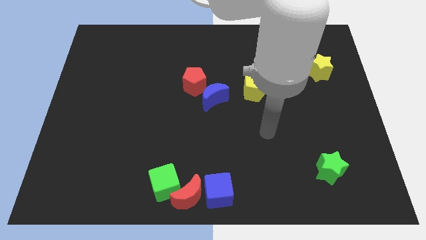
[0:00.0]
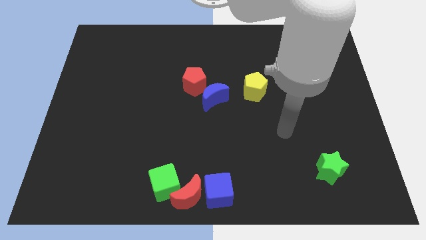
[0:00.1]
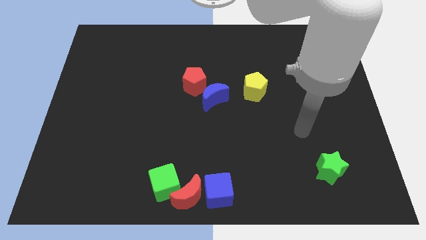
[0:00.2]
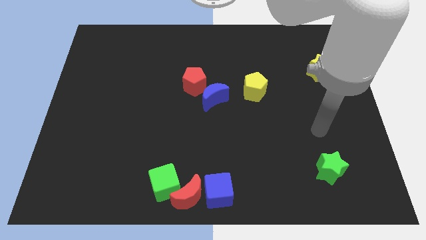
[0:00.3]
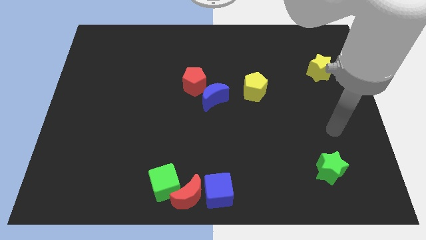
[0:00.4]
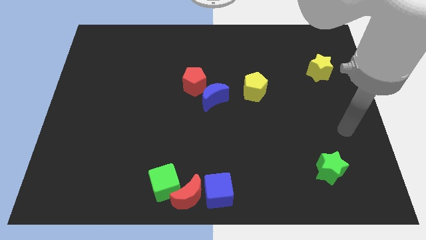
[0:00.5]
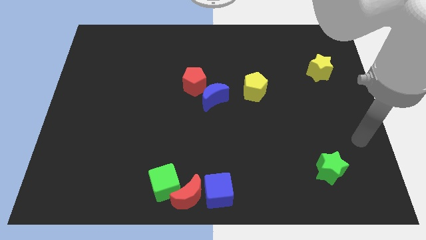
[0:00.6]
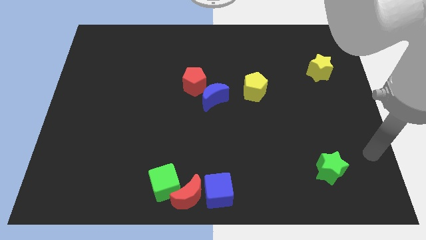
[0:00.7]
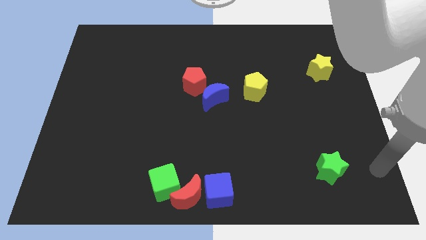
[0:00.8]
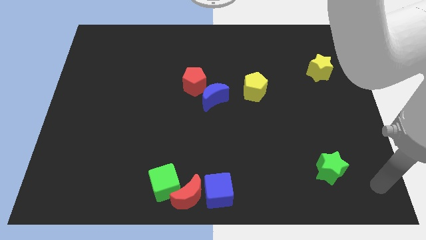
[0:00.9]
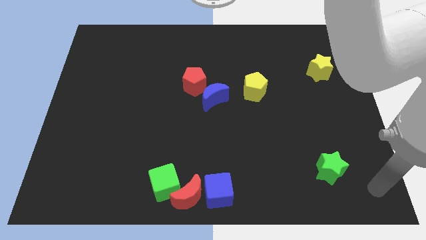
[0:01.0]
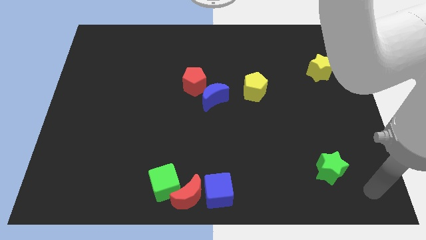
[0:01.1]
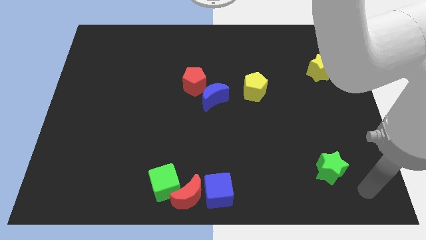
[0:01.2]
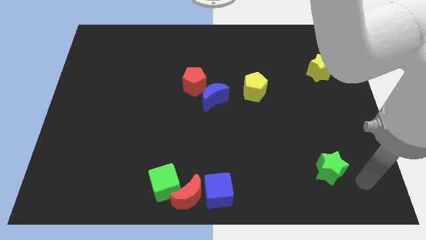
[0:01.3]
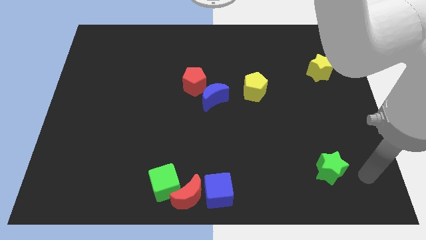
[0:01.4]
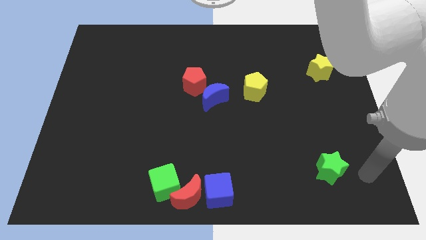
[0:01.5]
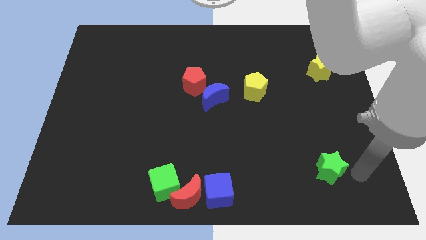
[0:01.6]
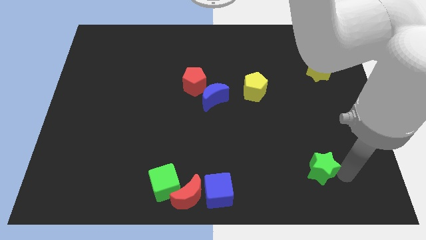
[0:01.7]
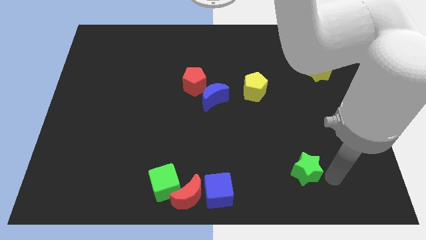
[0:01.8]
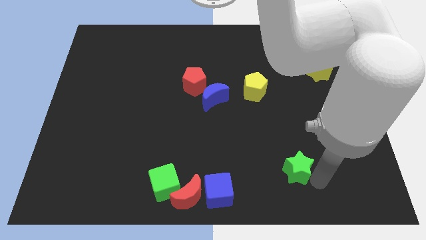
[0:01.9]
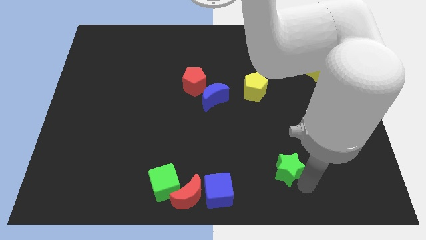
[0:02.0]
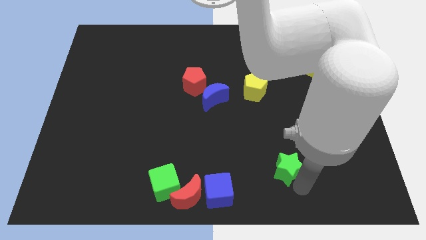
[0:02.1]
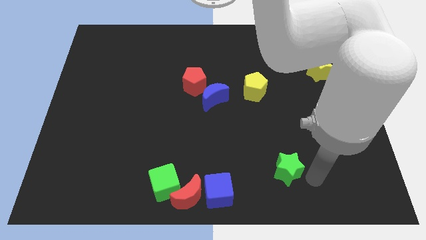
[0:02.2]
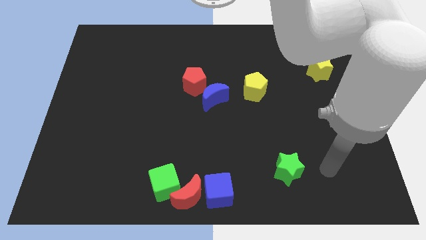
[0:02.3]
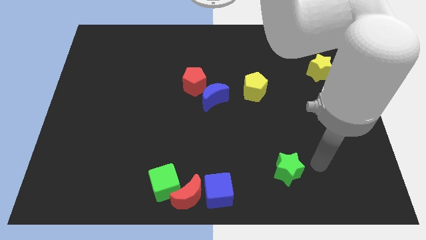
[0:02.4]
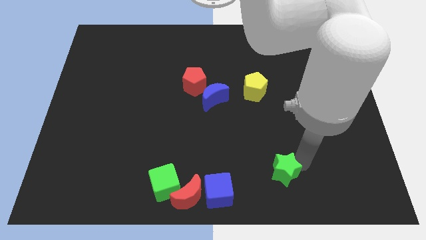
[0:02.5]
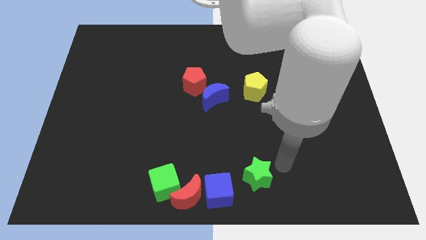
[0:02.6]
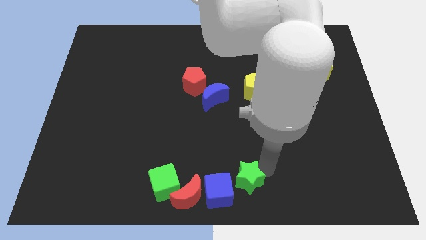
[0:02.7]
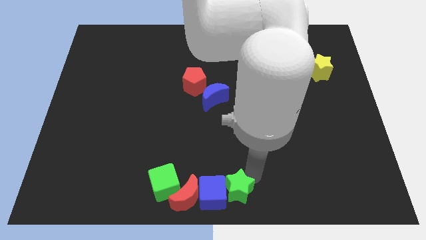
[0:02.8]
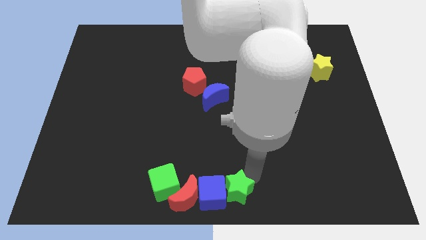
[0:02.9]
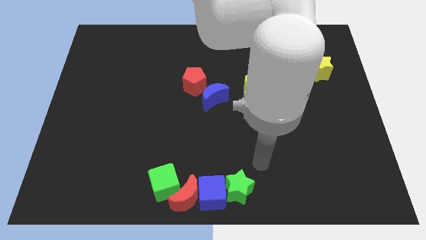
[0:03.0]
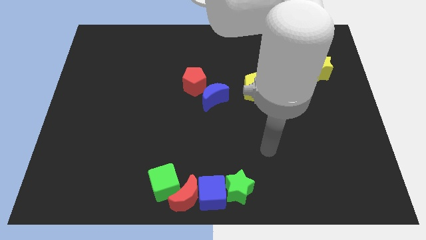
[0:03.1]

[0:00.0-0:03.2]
move the green star parallel right to the blue cube

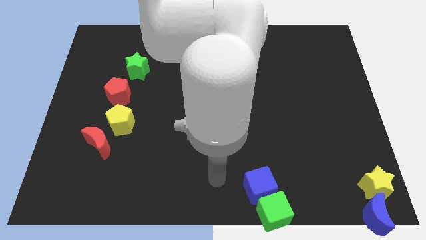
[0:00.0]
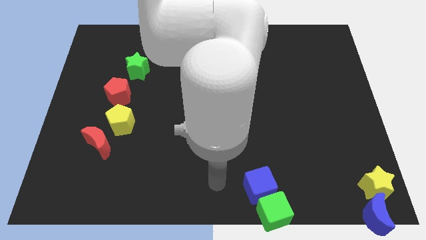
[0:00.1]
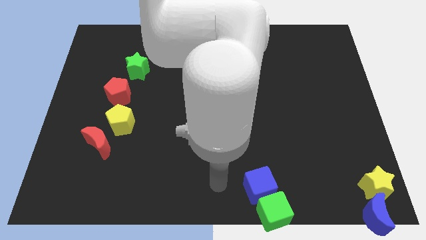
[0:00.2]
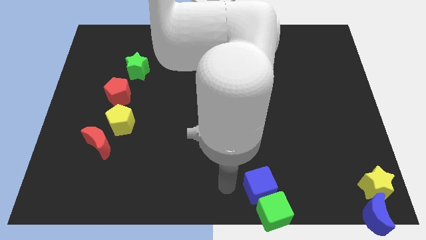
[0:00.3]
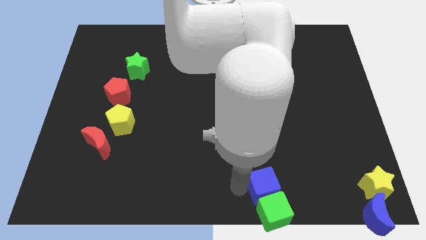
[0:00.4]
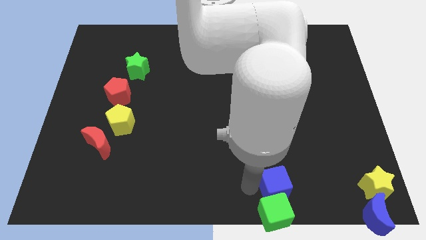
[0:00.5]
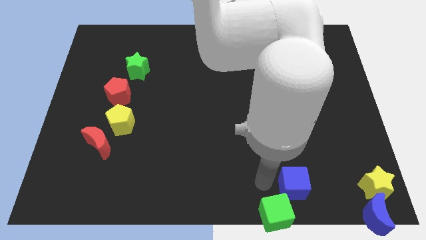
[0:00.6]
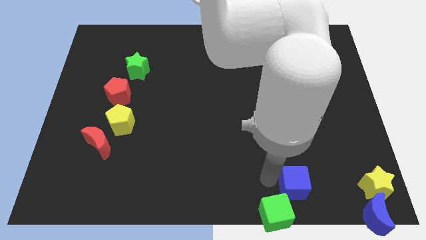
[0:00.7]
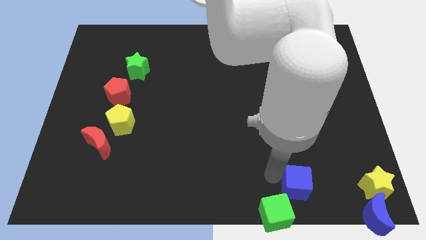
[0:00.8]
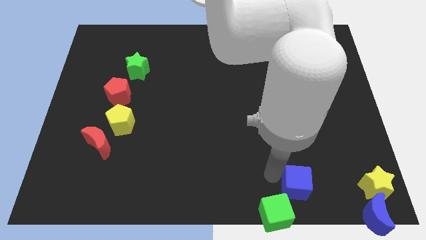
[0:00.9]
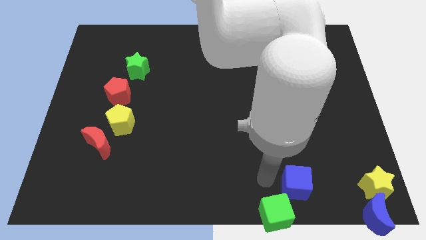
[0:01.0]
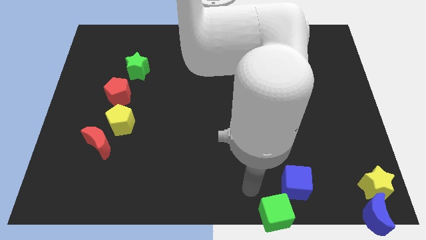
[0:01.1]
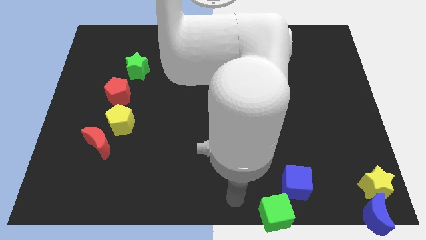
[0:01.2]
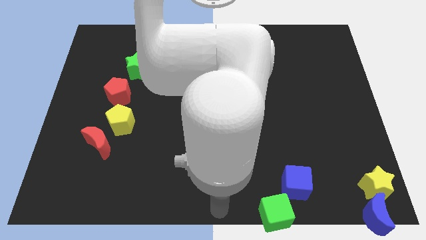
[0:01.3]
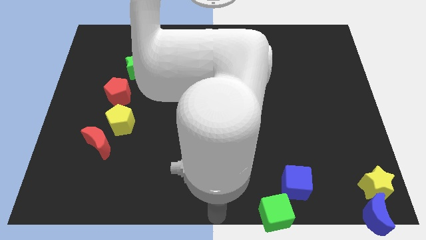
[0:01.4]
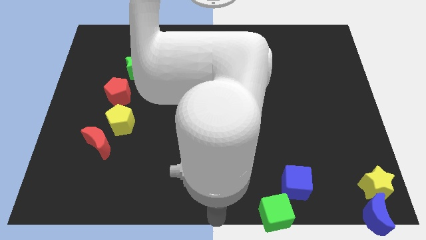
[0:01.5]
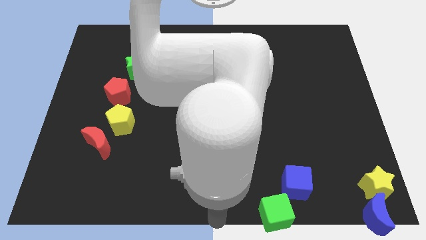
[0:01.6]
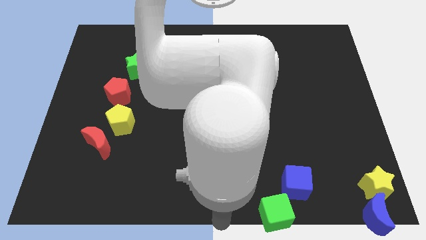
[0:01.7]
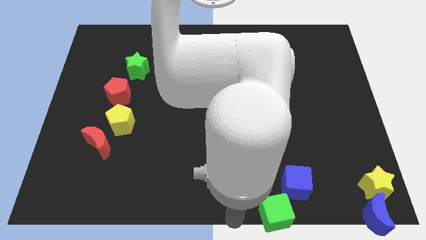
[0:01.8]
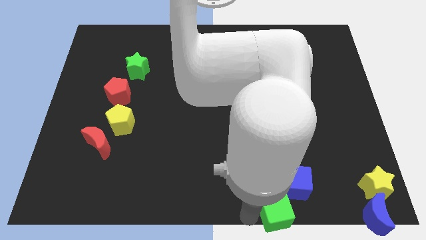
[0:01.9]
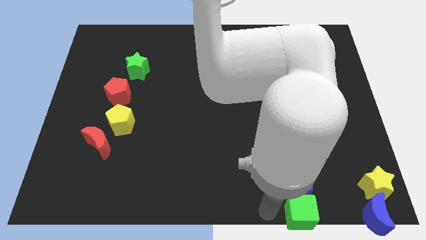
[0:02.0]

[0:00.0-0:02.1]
put the blue cube diagonally top right to the green cube

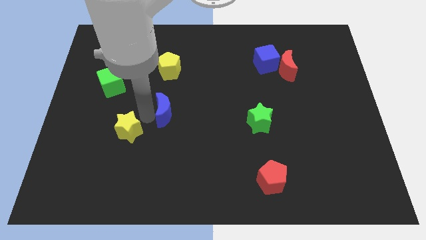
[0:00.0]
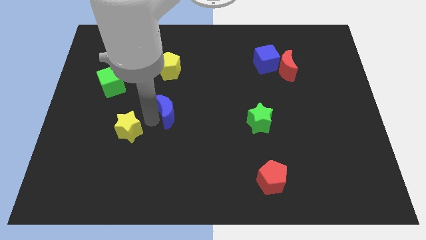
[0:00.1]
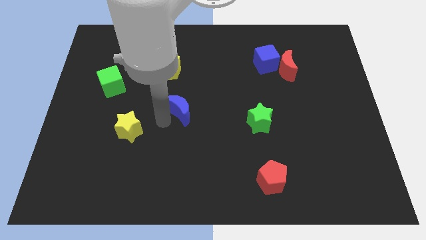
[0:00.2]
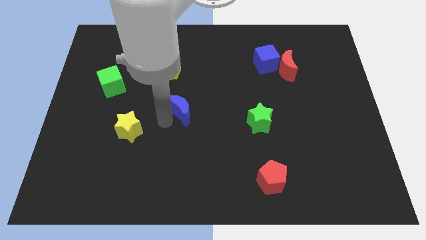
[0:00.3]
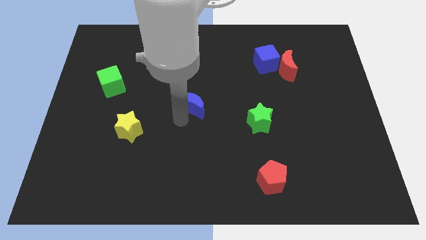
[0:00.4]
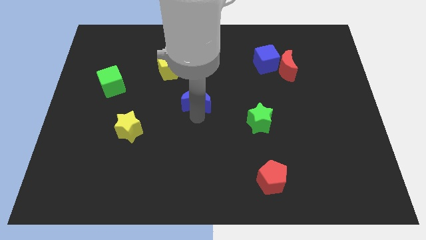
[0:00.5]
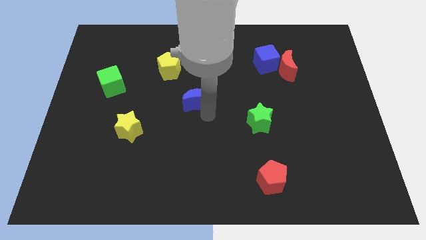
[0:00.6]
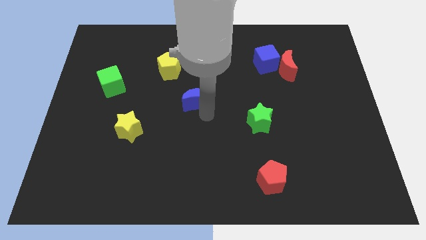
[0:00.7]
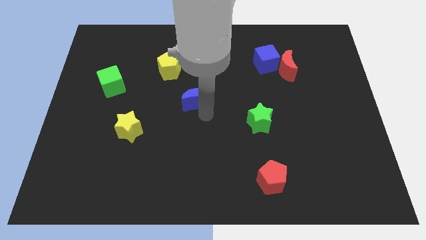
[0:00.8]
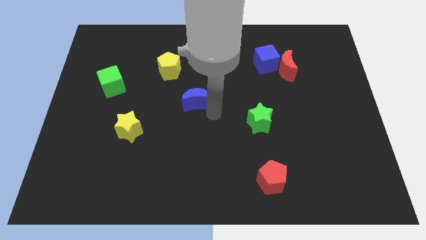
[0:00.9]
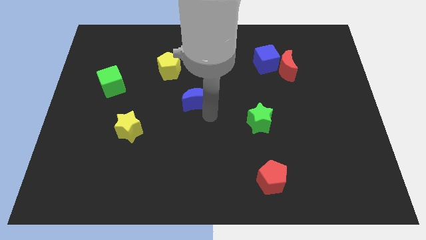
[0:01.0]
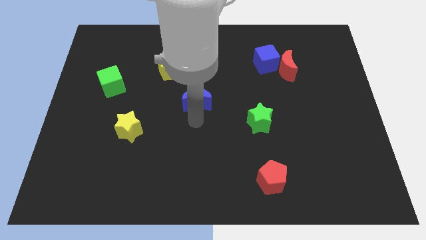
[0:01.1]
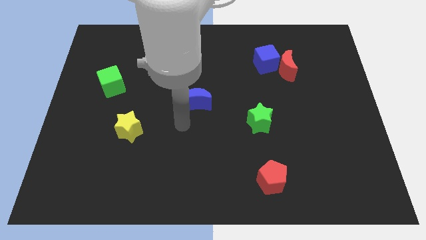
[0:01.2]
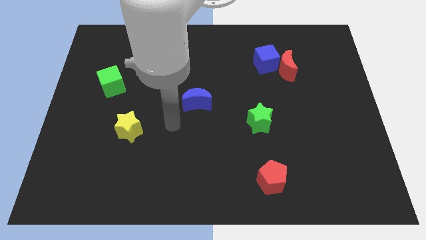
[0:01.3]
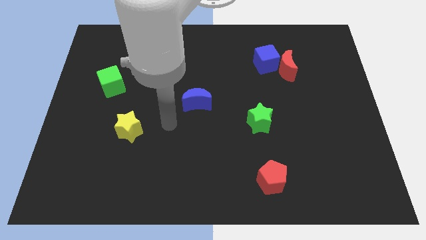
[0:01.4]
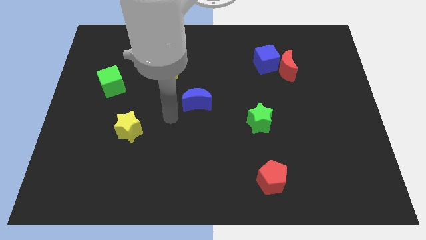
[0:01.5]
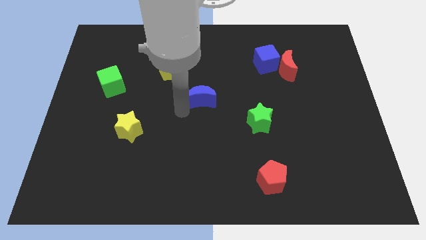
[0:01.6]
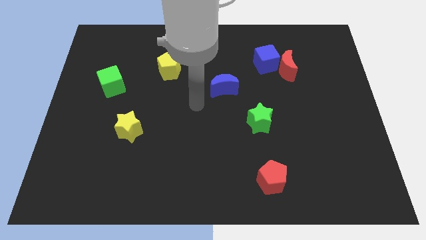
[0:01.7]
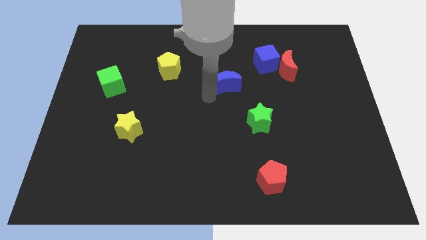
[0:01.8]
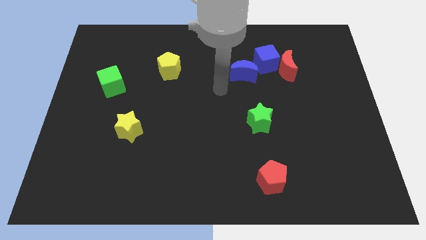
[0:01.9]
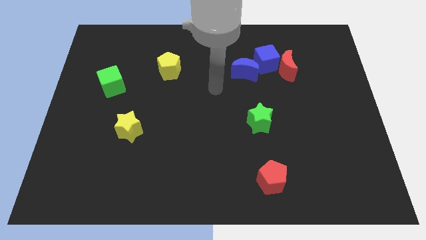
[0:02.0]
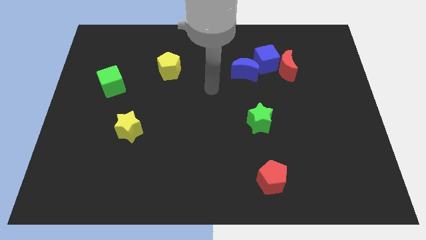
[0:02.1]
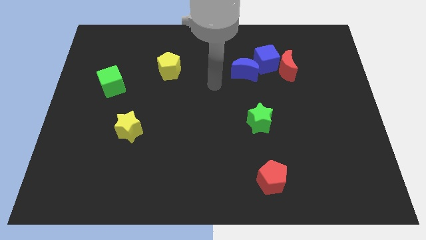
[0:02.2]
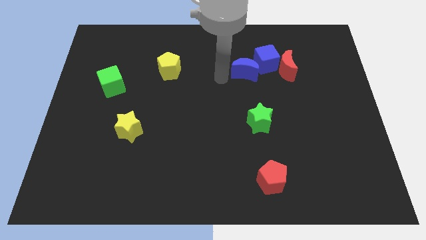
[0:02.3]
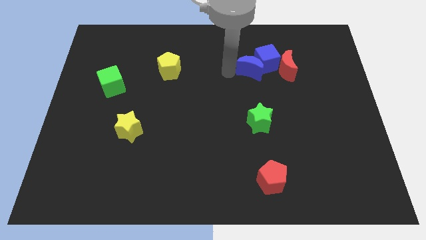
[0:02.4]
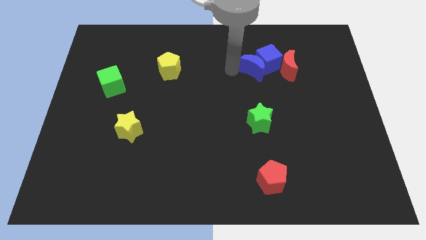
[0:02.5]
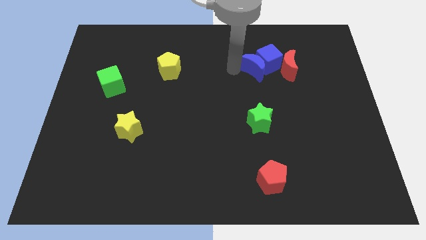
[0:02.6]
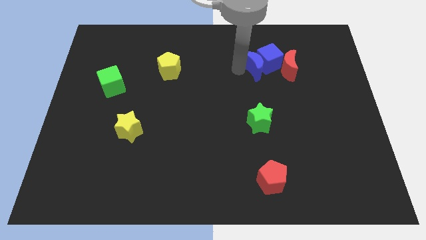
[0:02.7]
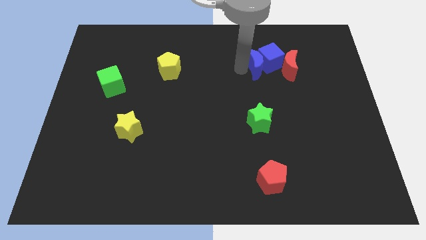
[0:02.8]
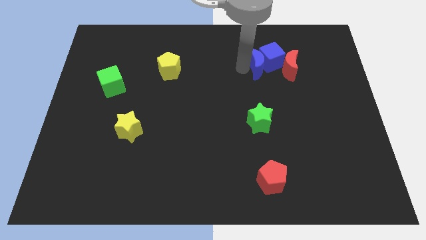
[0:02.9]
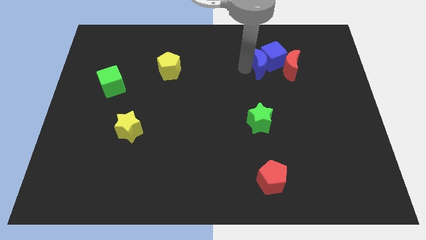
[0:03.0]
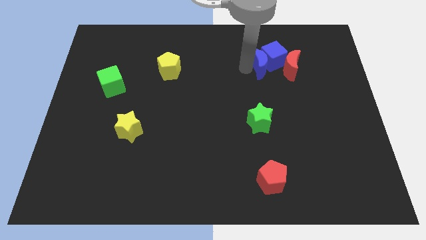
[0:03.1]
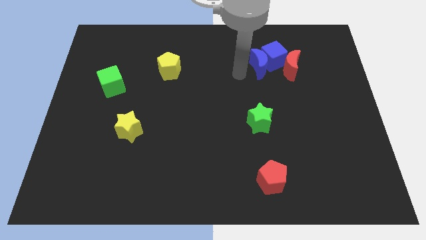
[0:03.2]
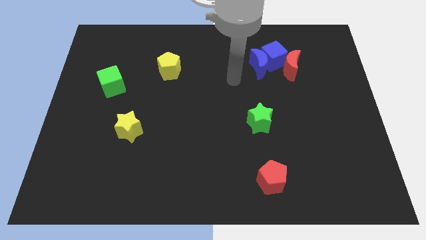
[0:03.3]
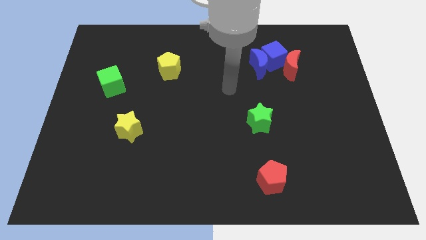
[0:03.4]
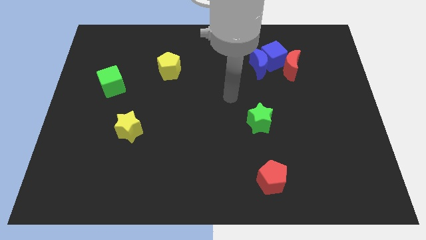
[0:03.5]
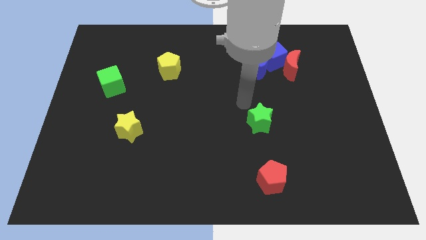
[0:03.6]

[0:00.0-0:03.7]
push the blue moon into the blue cube and red moon
